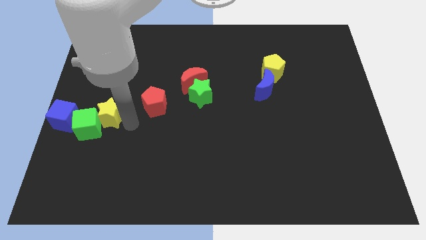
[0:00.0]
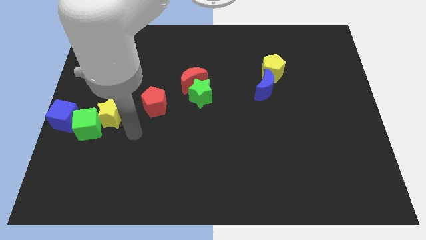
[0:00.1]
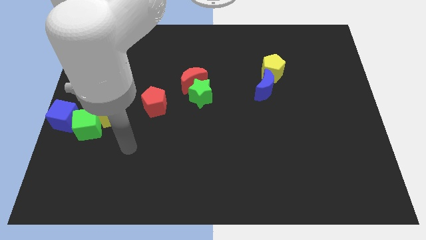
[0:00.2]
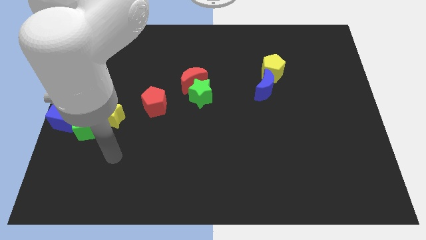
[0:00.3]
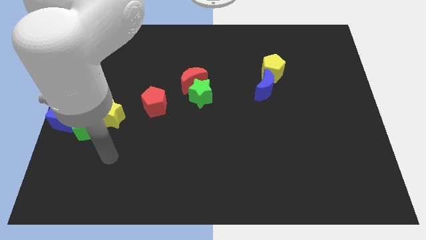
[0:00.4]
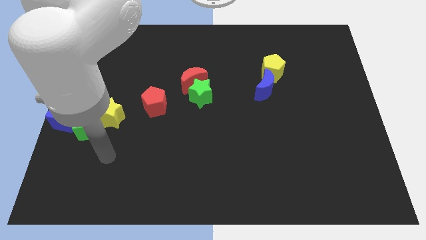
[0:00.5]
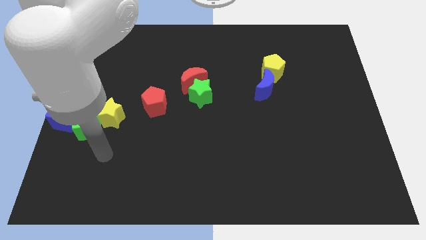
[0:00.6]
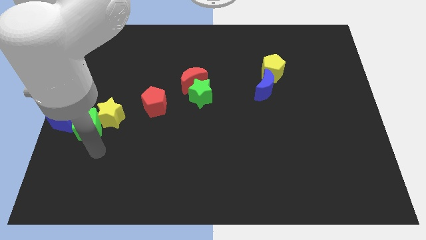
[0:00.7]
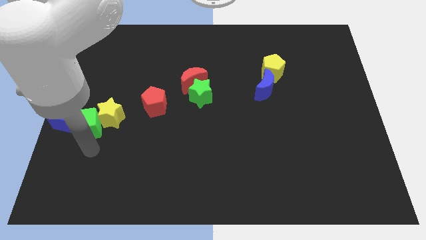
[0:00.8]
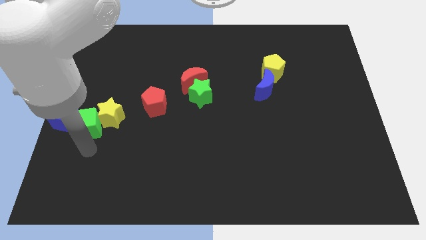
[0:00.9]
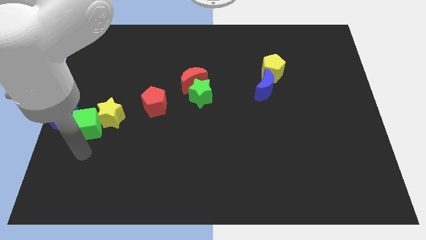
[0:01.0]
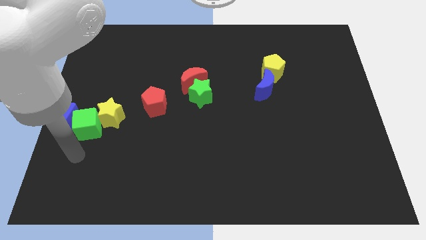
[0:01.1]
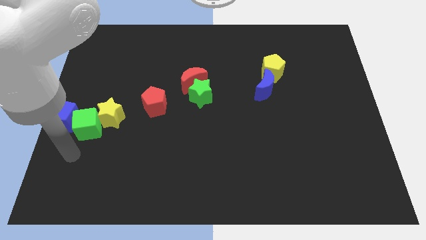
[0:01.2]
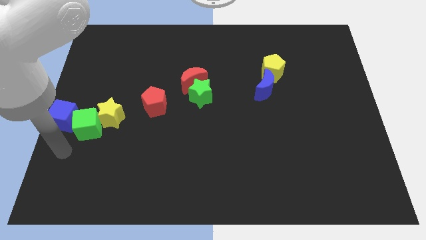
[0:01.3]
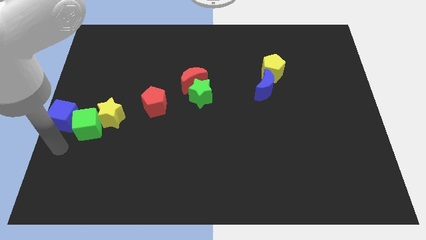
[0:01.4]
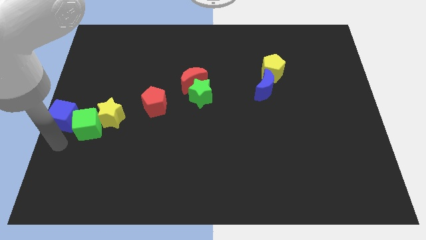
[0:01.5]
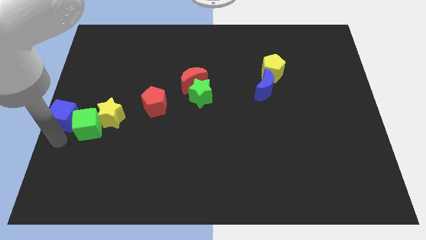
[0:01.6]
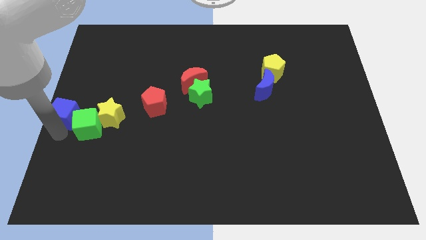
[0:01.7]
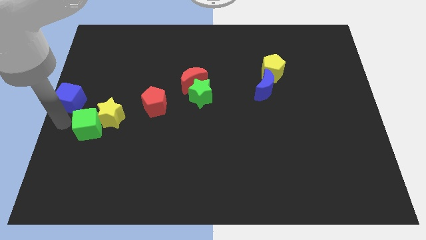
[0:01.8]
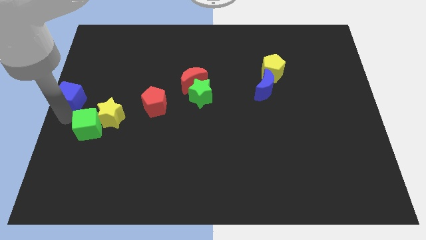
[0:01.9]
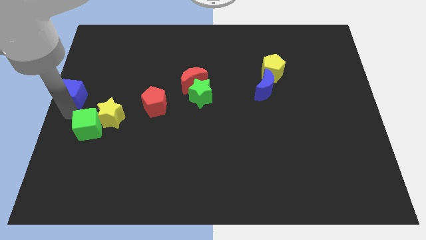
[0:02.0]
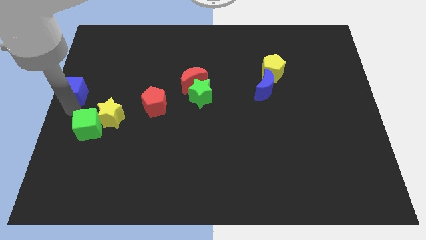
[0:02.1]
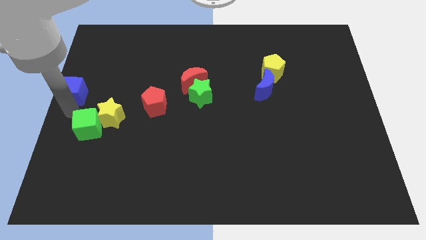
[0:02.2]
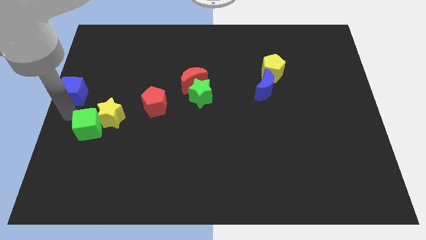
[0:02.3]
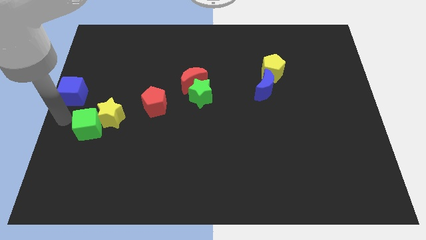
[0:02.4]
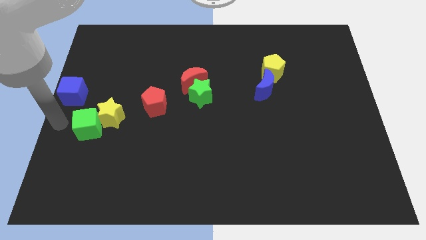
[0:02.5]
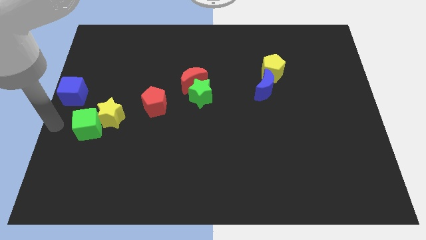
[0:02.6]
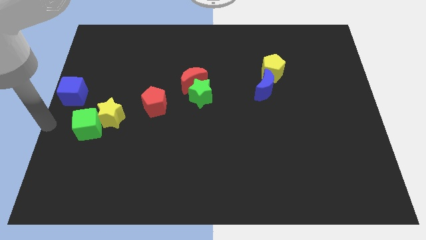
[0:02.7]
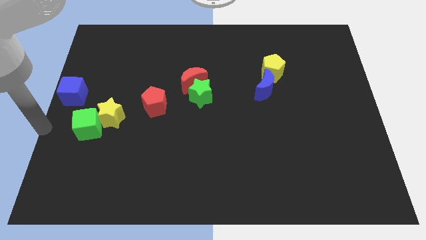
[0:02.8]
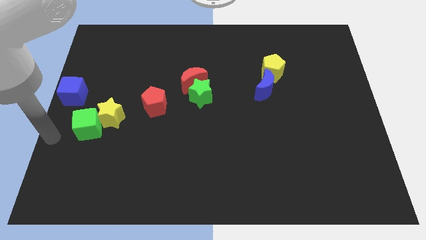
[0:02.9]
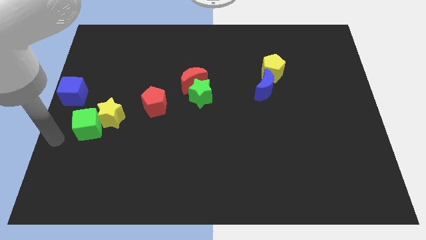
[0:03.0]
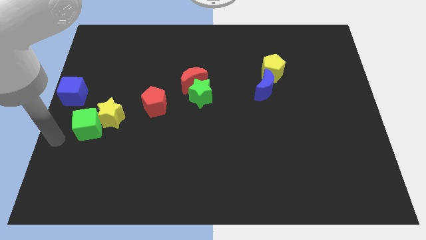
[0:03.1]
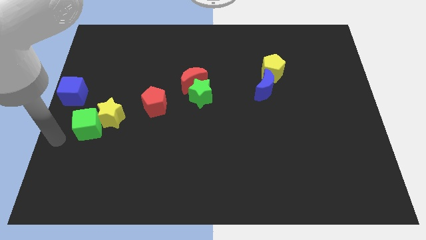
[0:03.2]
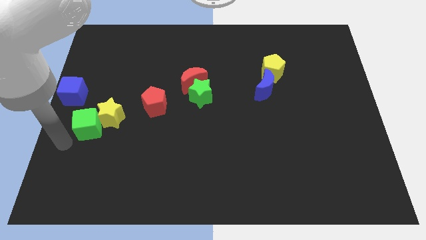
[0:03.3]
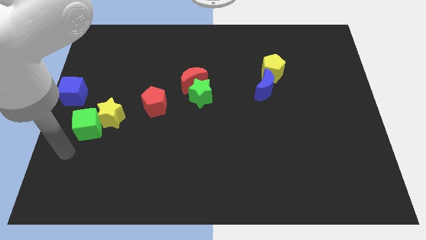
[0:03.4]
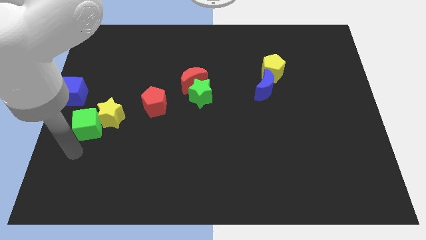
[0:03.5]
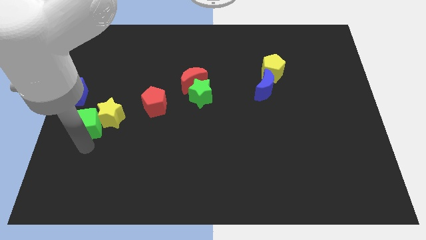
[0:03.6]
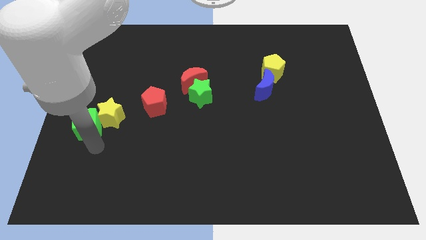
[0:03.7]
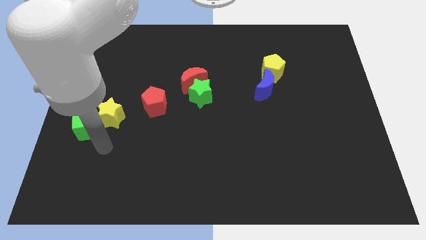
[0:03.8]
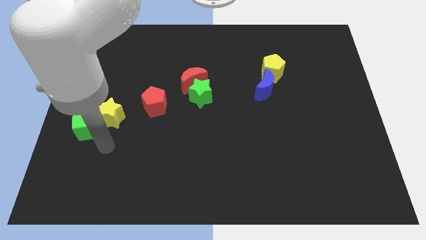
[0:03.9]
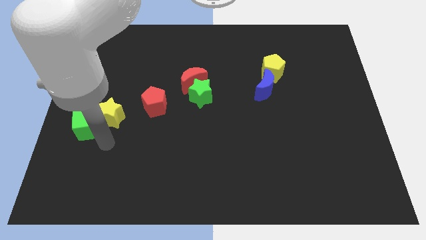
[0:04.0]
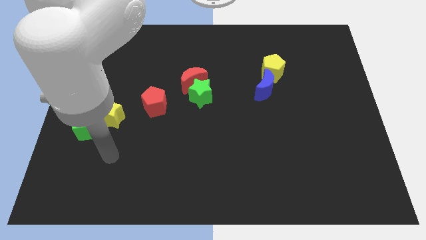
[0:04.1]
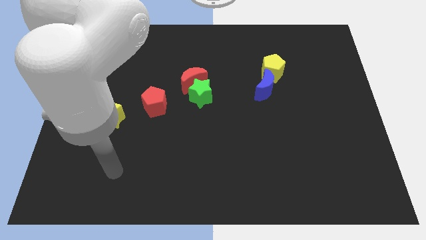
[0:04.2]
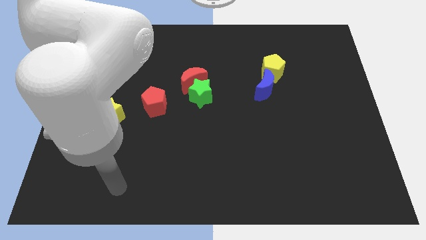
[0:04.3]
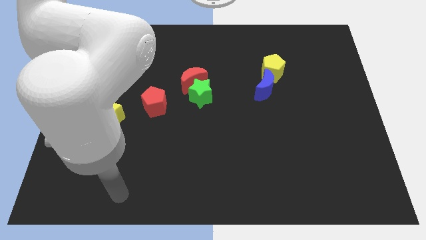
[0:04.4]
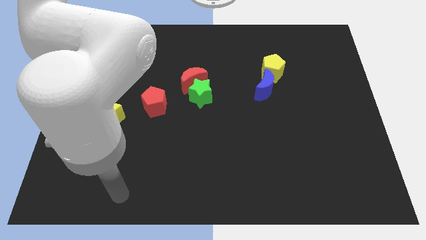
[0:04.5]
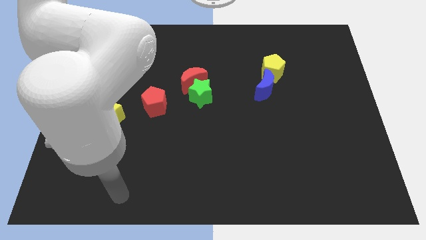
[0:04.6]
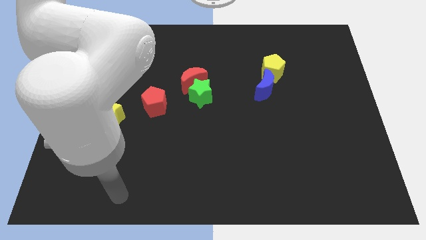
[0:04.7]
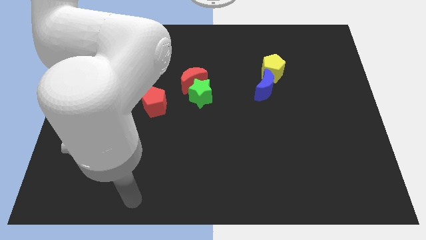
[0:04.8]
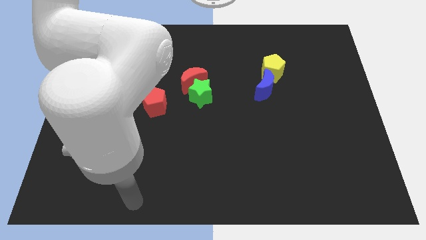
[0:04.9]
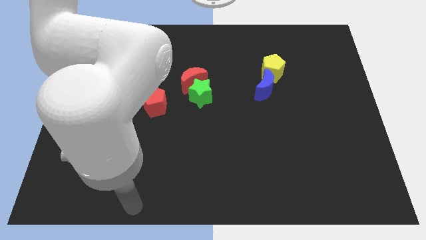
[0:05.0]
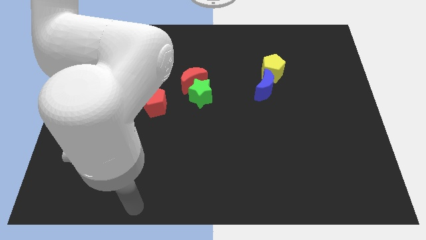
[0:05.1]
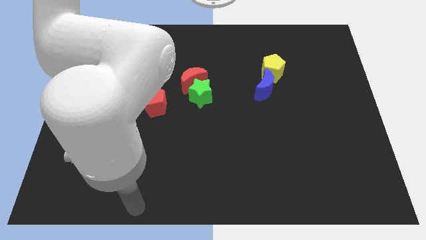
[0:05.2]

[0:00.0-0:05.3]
place the blue cube at the top of the green cube

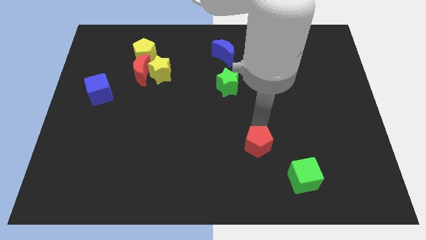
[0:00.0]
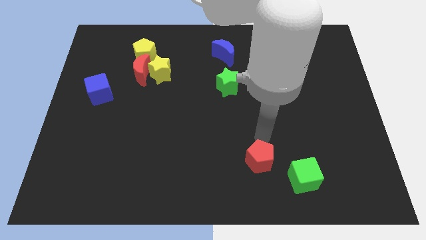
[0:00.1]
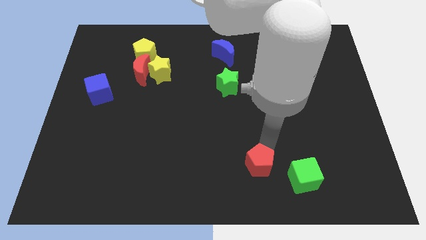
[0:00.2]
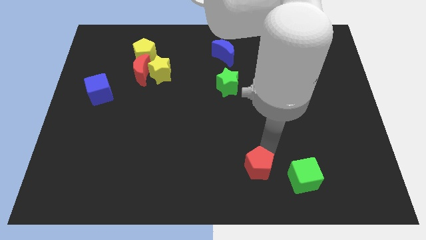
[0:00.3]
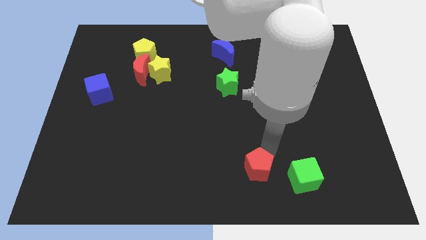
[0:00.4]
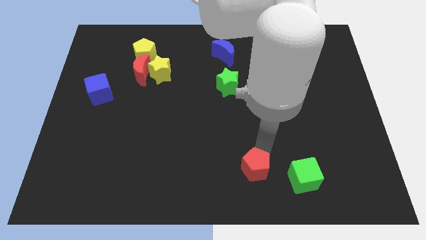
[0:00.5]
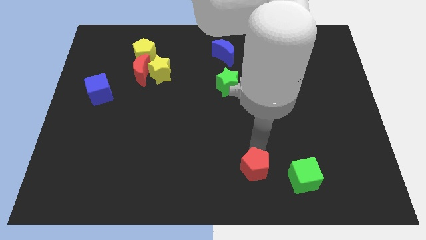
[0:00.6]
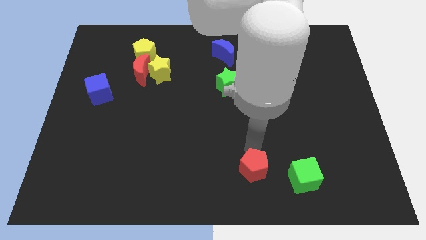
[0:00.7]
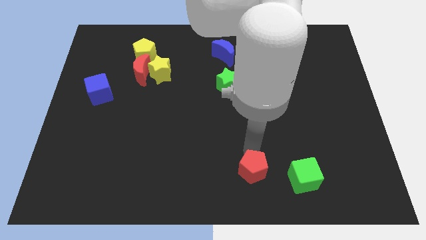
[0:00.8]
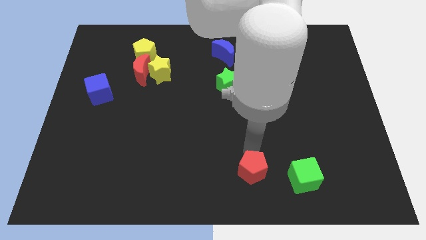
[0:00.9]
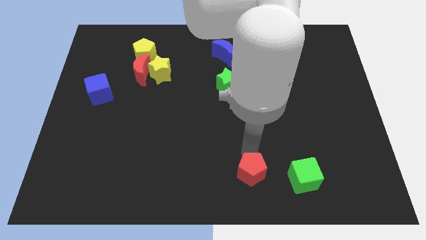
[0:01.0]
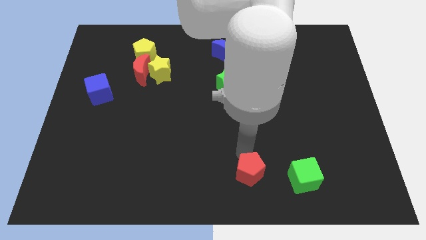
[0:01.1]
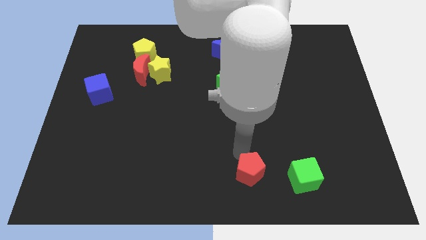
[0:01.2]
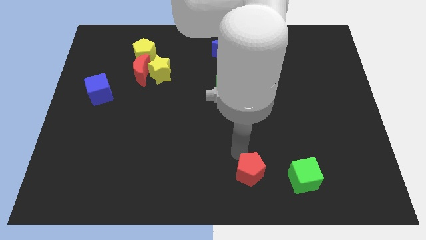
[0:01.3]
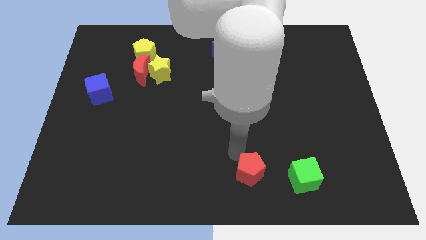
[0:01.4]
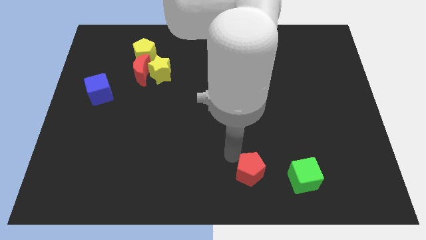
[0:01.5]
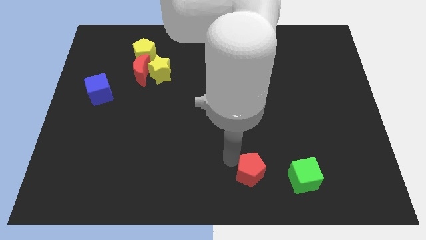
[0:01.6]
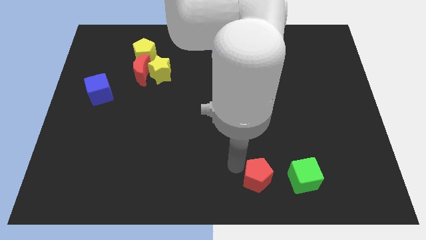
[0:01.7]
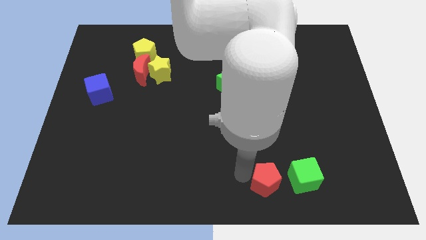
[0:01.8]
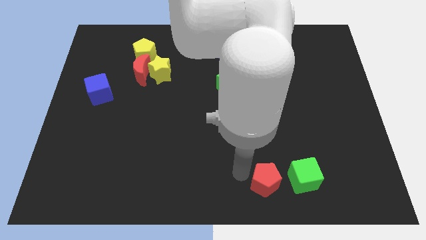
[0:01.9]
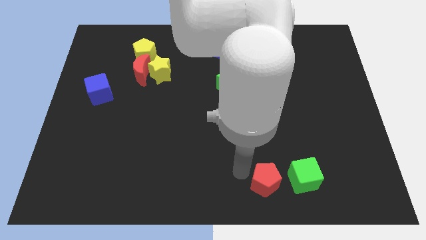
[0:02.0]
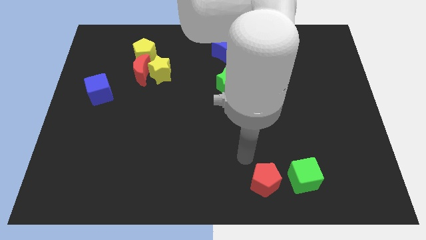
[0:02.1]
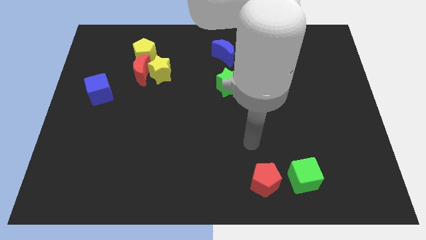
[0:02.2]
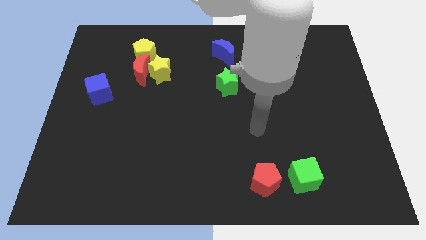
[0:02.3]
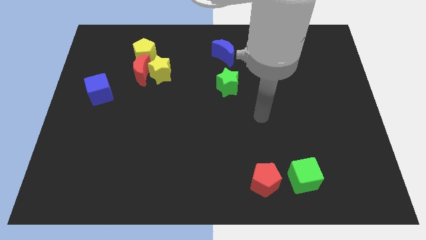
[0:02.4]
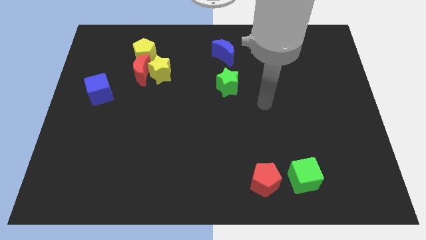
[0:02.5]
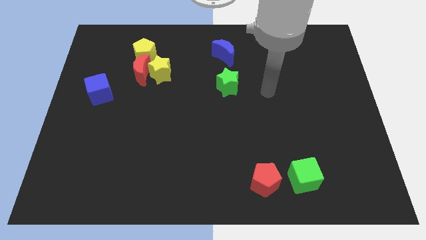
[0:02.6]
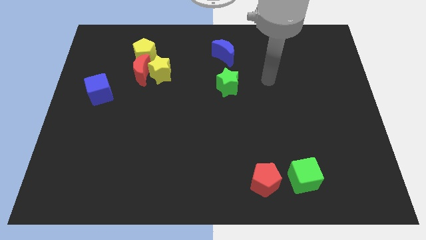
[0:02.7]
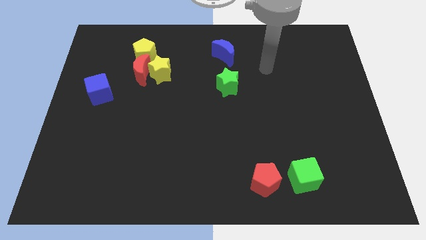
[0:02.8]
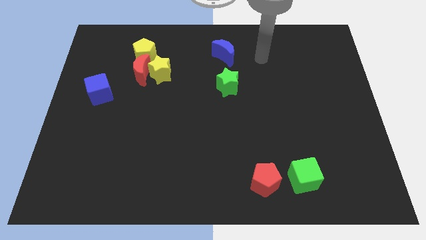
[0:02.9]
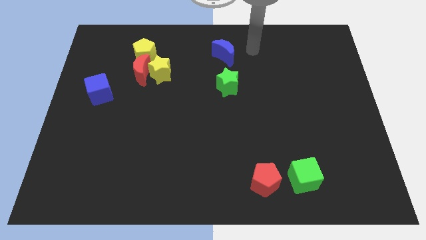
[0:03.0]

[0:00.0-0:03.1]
place the red pentagon diagonally to blue cube

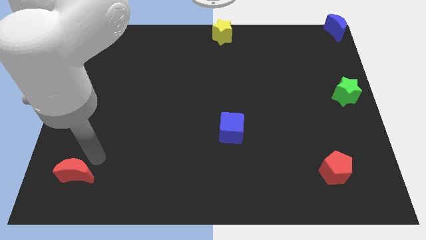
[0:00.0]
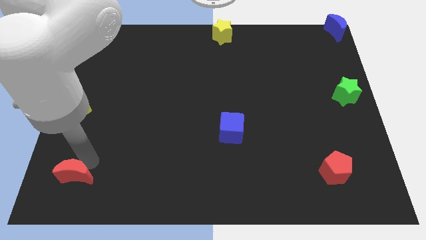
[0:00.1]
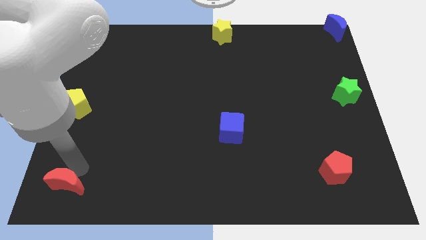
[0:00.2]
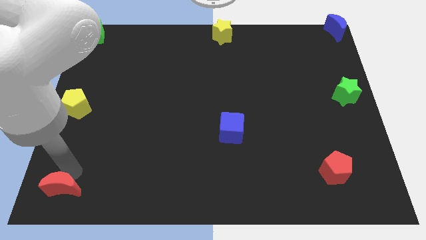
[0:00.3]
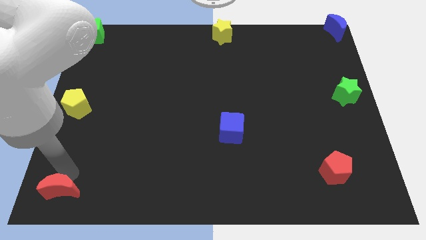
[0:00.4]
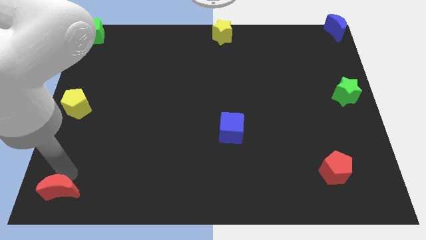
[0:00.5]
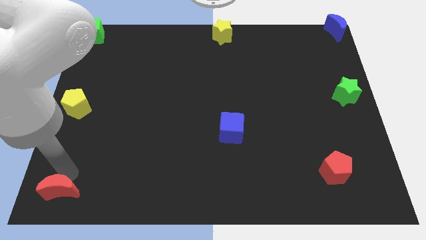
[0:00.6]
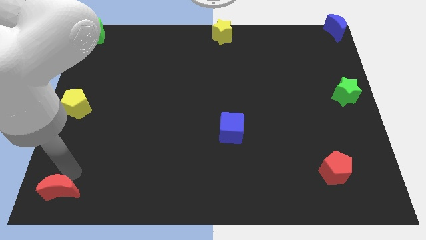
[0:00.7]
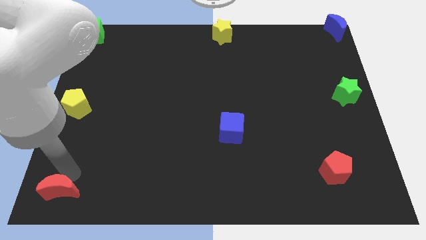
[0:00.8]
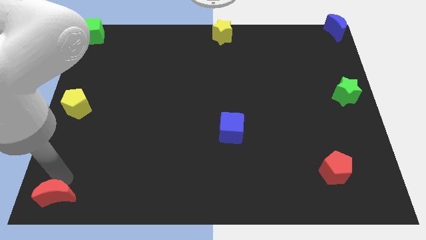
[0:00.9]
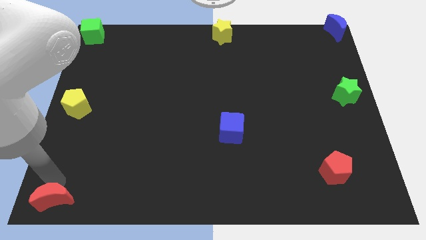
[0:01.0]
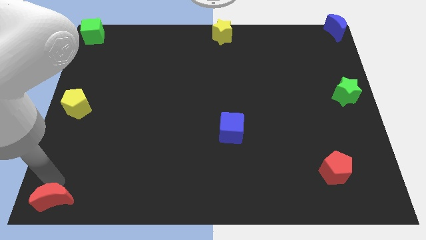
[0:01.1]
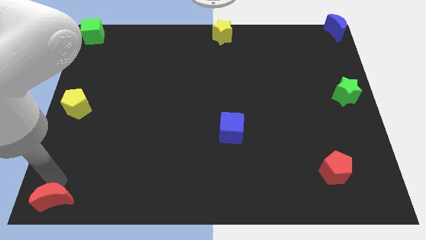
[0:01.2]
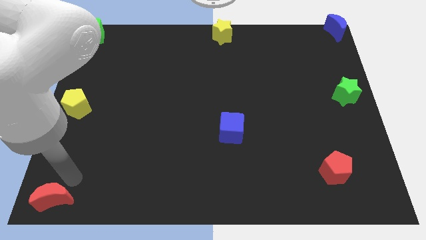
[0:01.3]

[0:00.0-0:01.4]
push the red crescent to the bottom left to the board
